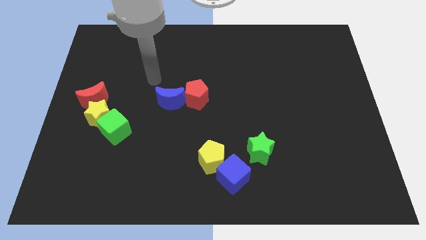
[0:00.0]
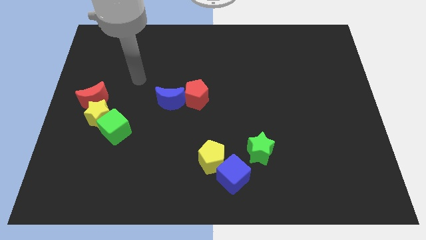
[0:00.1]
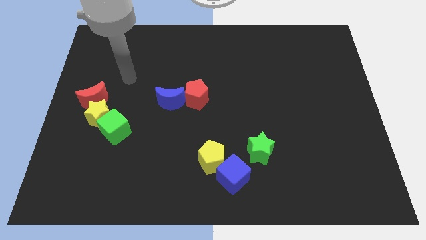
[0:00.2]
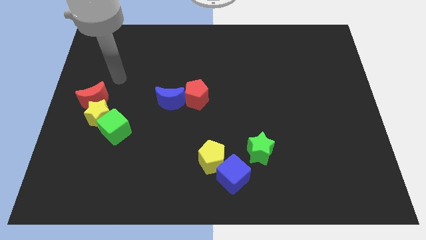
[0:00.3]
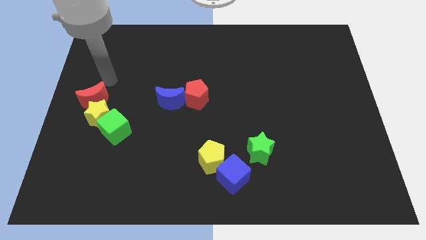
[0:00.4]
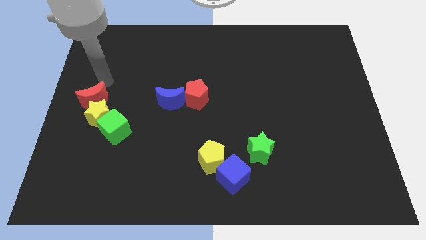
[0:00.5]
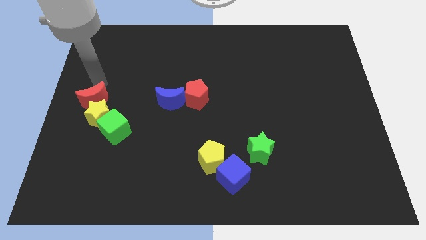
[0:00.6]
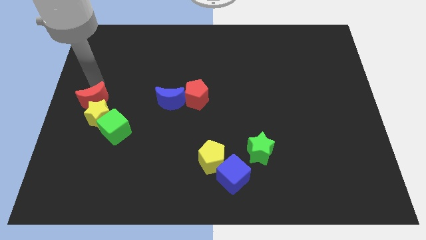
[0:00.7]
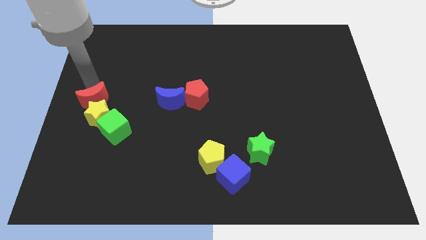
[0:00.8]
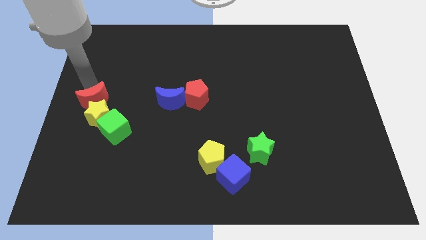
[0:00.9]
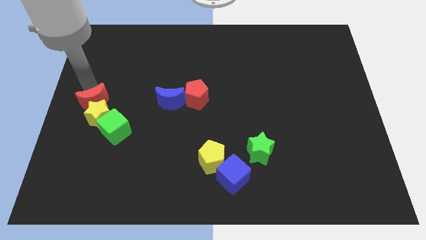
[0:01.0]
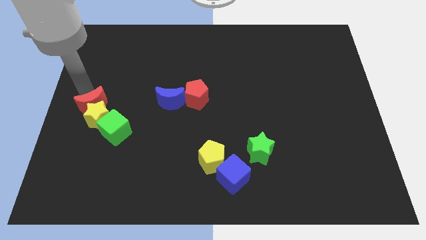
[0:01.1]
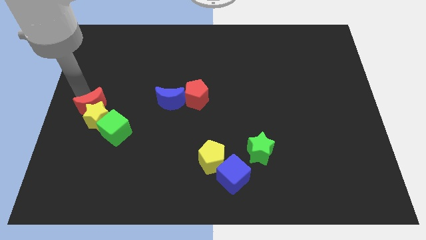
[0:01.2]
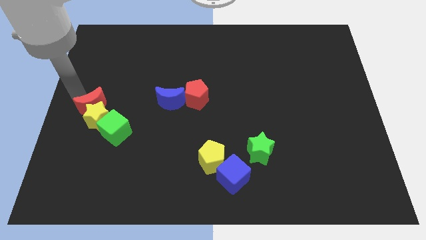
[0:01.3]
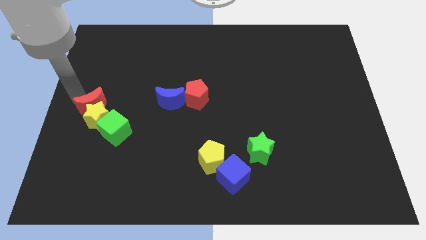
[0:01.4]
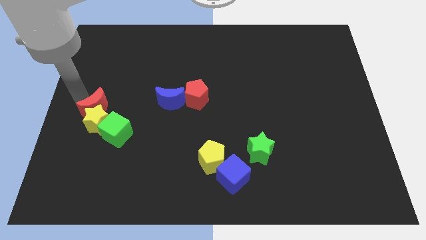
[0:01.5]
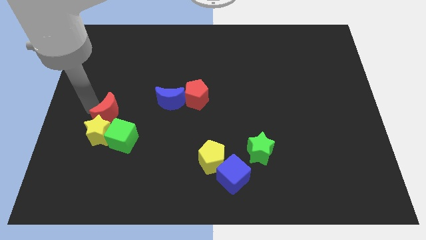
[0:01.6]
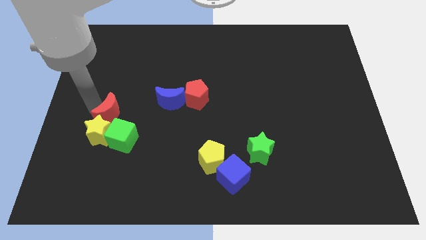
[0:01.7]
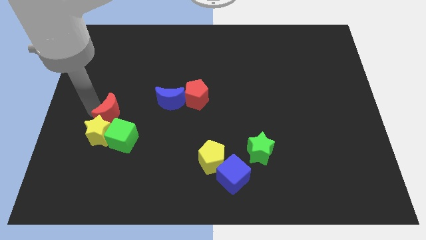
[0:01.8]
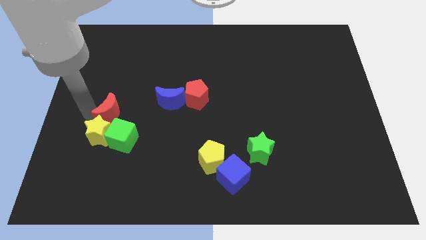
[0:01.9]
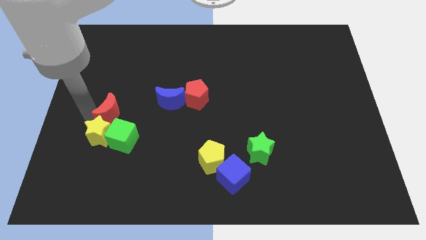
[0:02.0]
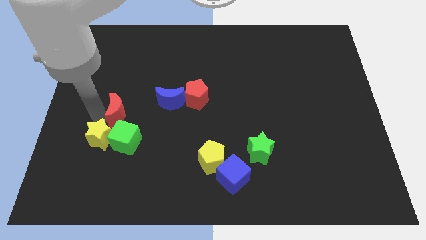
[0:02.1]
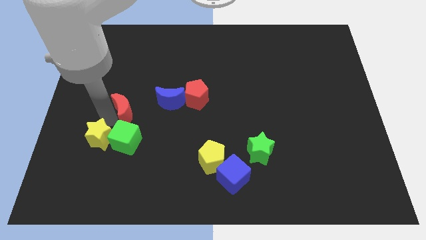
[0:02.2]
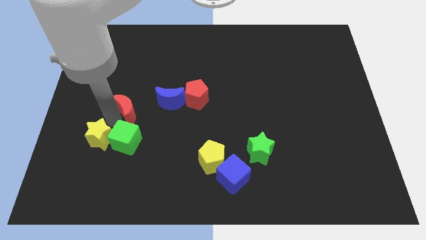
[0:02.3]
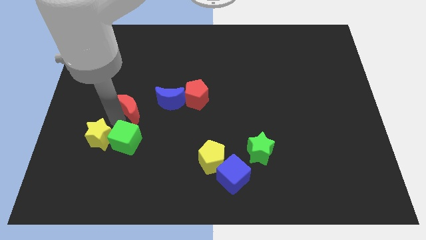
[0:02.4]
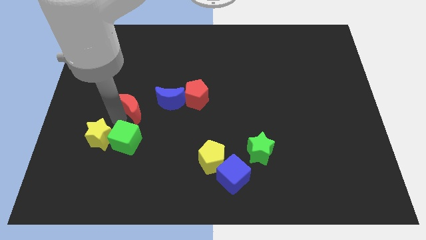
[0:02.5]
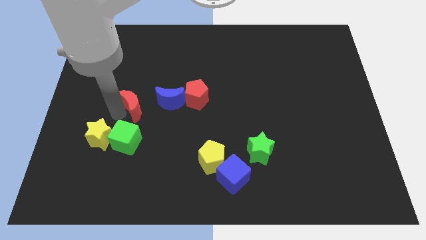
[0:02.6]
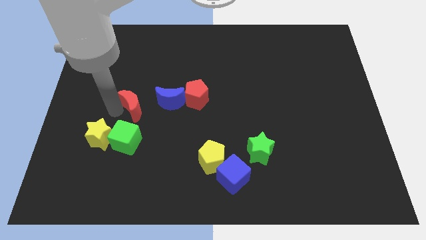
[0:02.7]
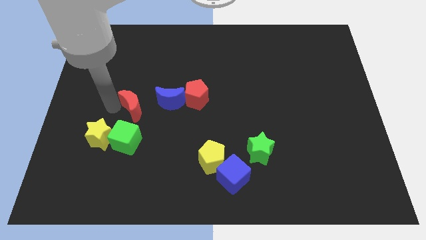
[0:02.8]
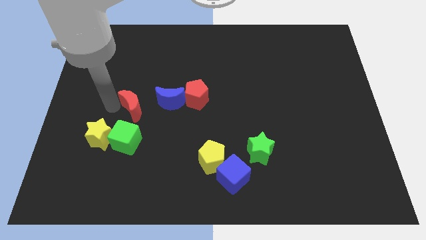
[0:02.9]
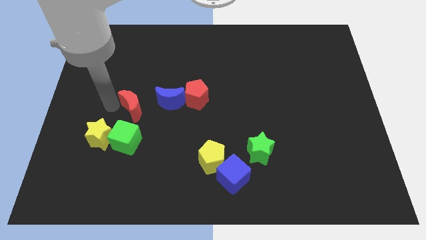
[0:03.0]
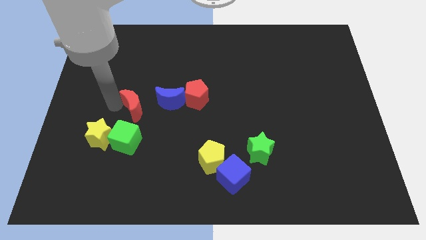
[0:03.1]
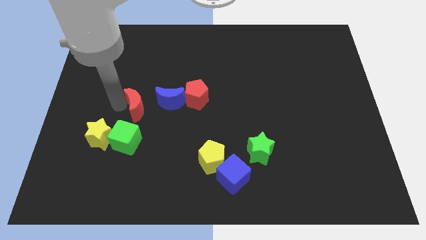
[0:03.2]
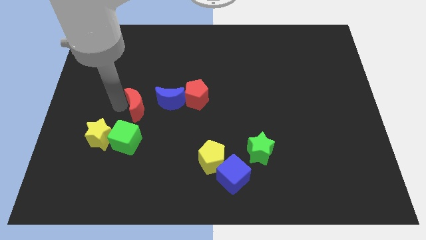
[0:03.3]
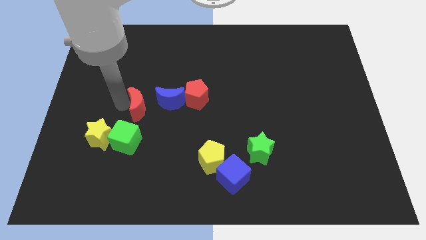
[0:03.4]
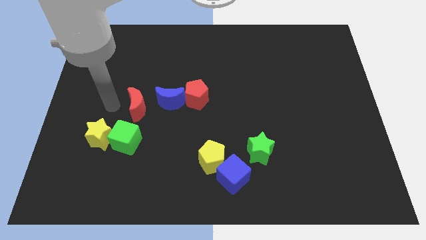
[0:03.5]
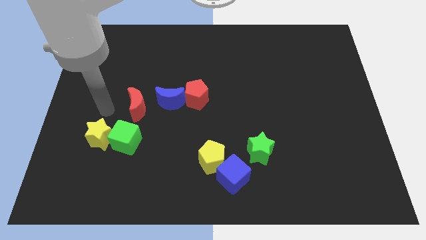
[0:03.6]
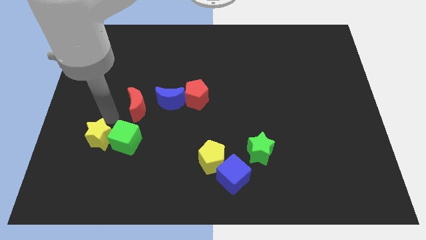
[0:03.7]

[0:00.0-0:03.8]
place the red moon to the top side of the green cube

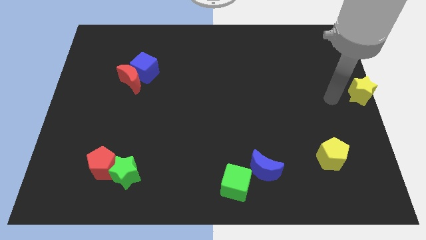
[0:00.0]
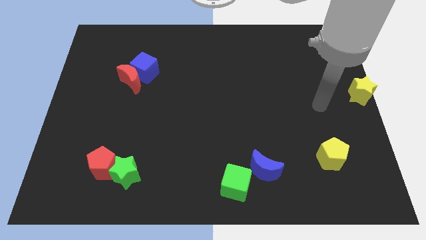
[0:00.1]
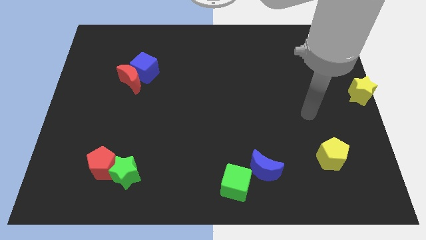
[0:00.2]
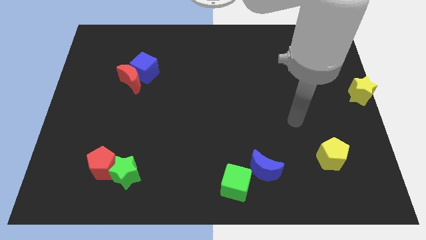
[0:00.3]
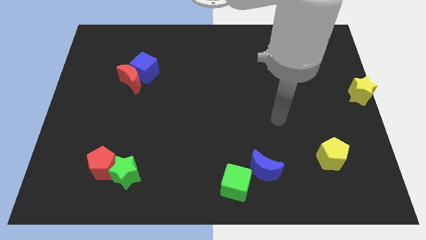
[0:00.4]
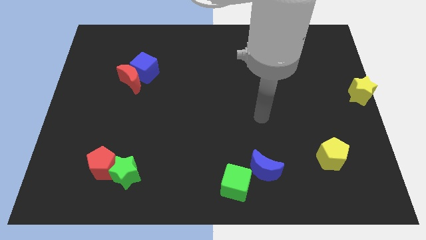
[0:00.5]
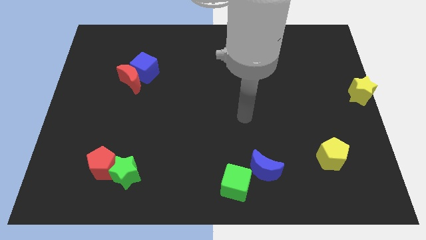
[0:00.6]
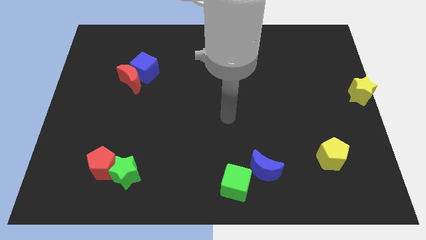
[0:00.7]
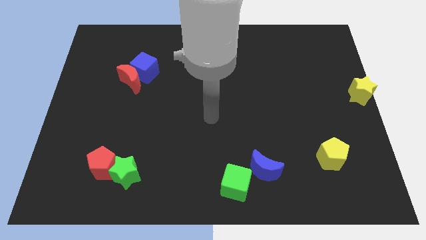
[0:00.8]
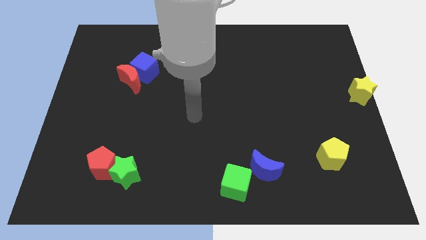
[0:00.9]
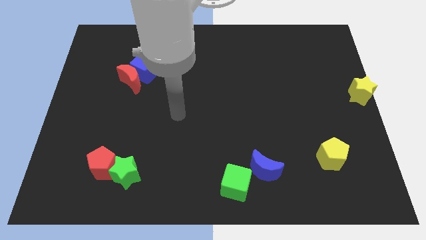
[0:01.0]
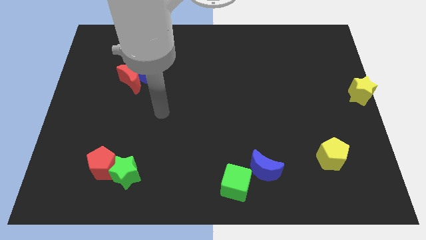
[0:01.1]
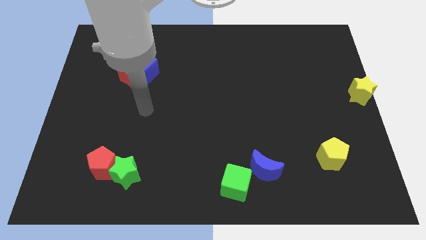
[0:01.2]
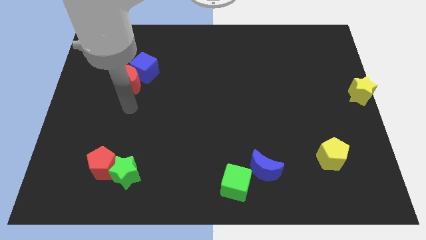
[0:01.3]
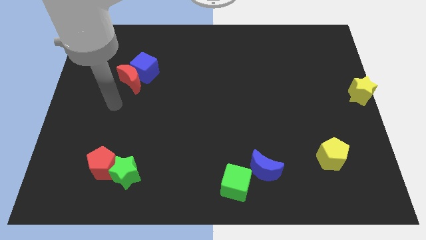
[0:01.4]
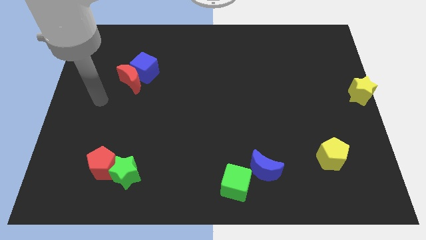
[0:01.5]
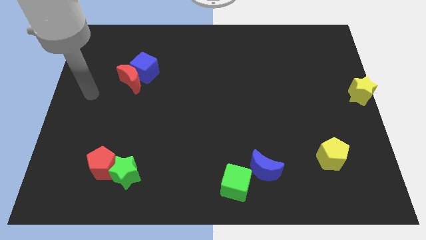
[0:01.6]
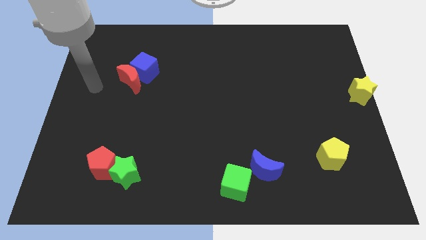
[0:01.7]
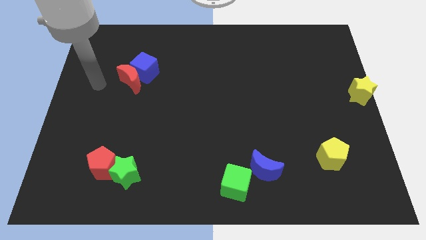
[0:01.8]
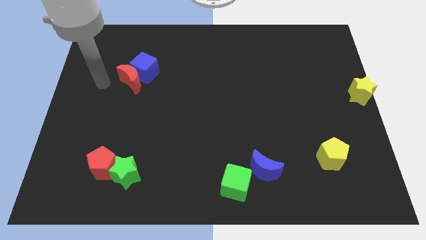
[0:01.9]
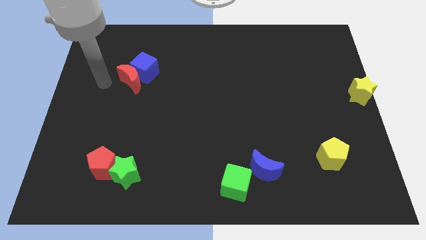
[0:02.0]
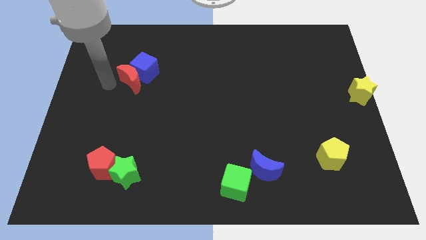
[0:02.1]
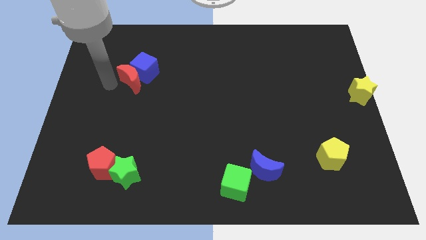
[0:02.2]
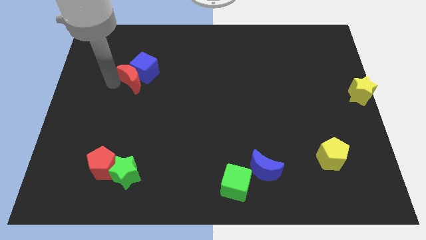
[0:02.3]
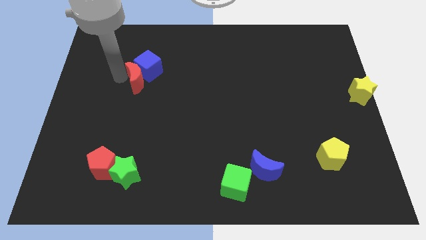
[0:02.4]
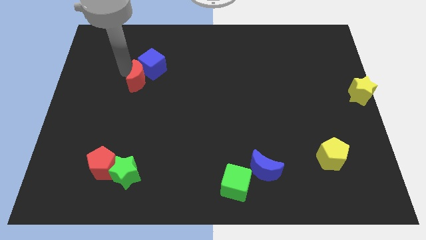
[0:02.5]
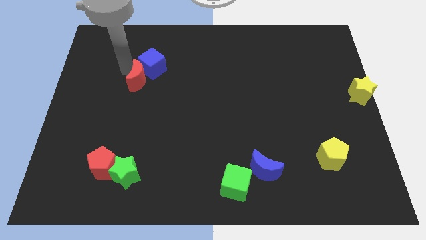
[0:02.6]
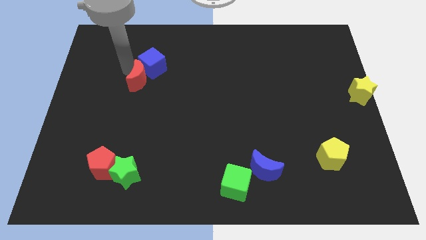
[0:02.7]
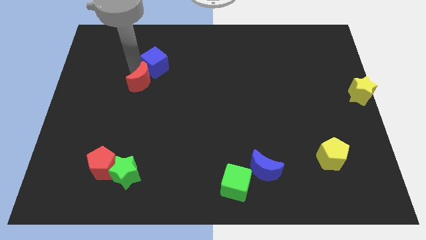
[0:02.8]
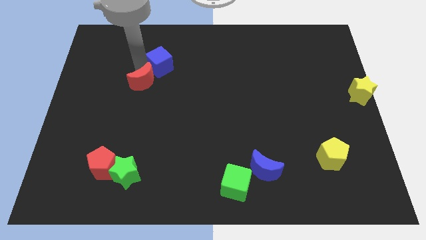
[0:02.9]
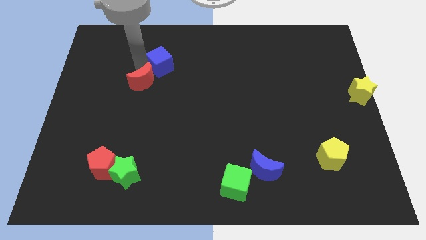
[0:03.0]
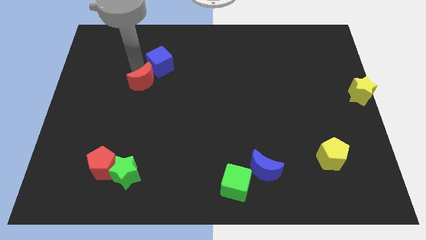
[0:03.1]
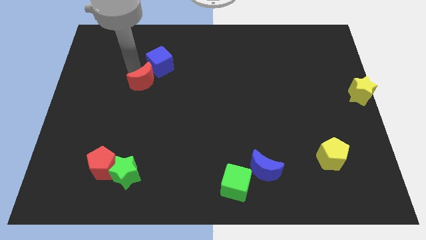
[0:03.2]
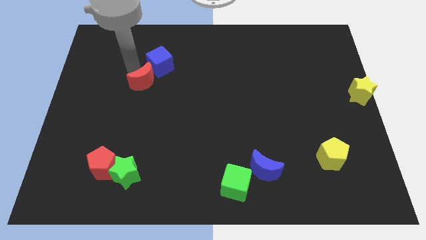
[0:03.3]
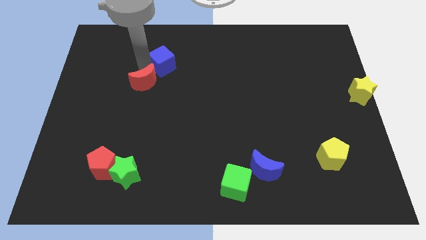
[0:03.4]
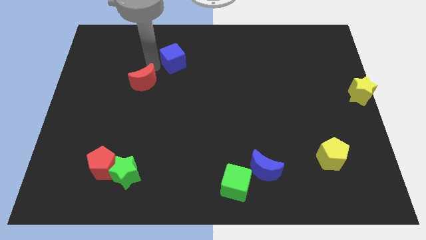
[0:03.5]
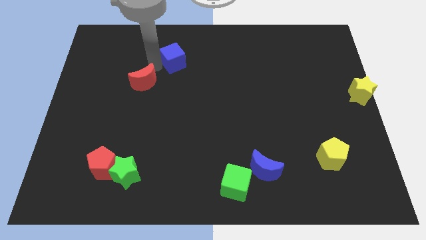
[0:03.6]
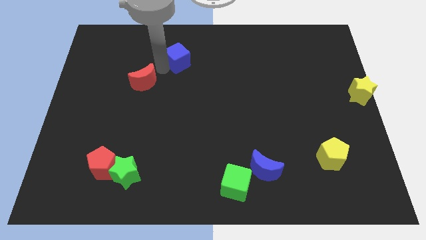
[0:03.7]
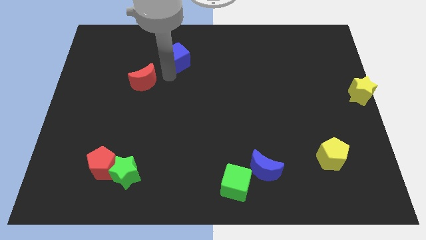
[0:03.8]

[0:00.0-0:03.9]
push the blue cube towards the top centre

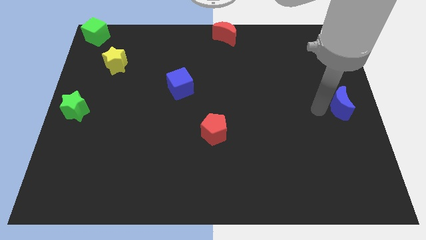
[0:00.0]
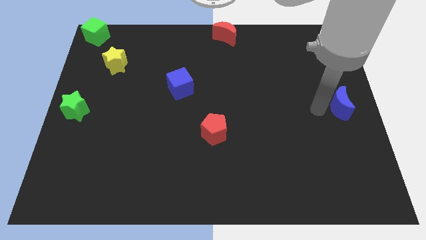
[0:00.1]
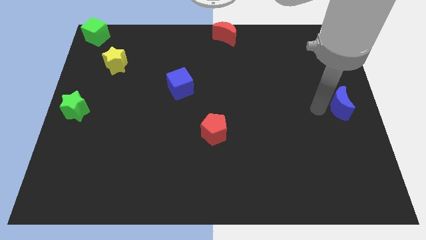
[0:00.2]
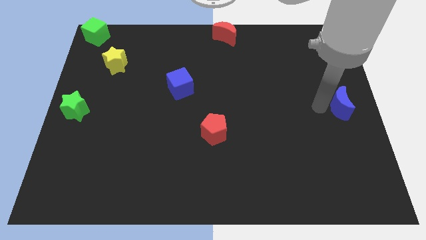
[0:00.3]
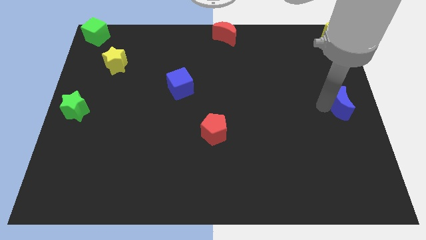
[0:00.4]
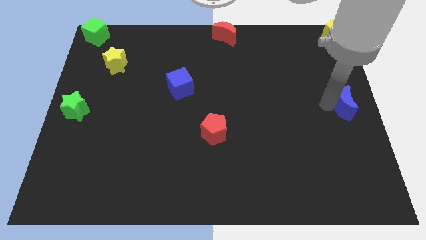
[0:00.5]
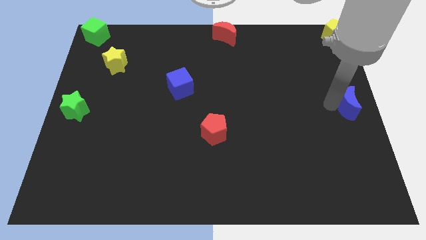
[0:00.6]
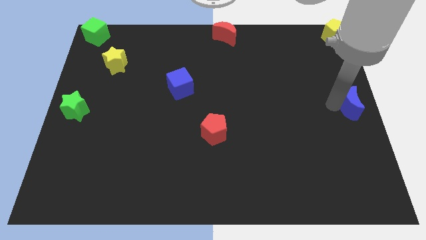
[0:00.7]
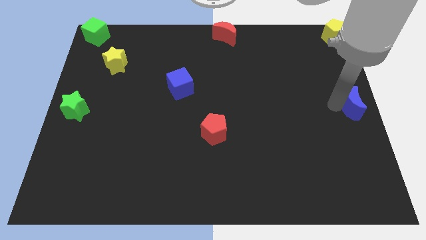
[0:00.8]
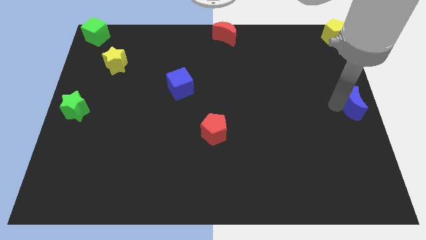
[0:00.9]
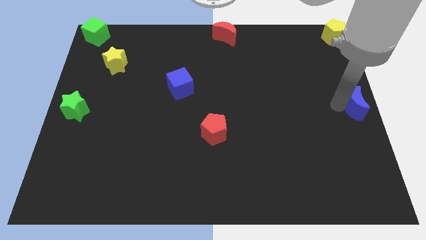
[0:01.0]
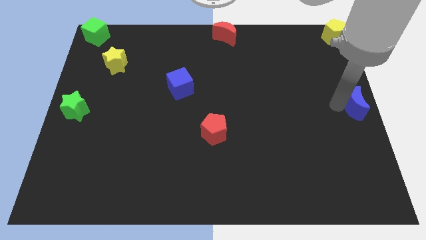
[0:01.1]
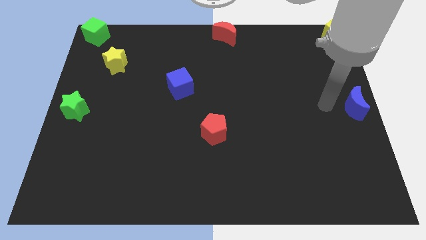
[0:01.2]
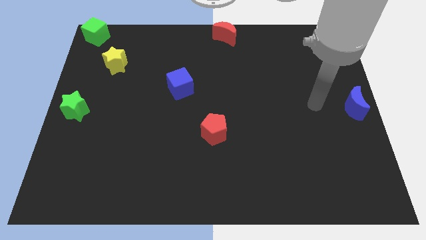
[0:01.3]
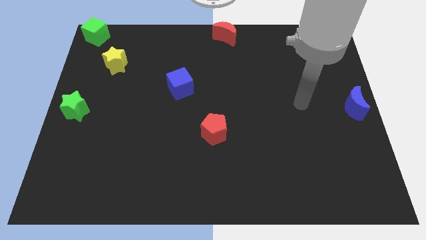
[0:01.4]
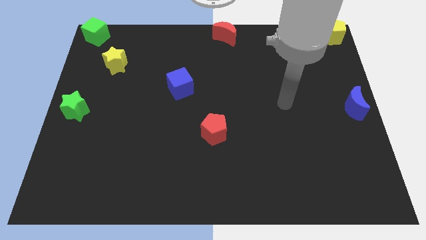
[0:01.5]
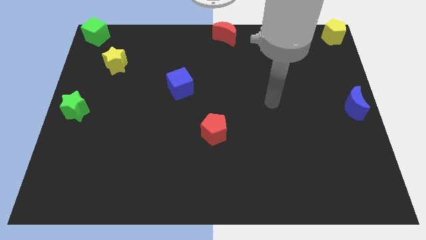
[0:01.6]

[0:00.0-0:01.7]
push the blue crescent to the right center of the board
